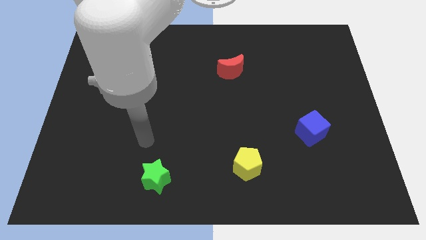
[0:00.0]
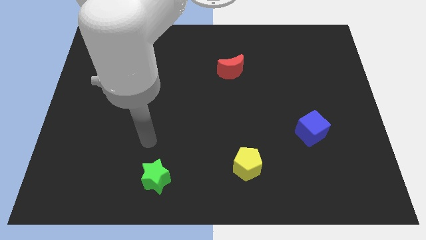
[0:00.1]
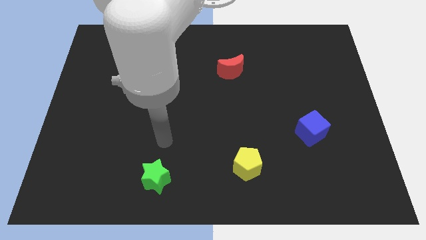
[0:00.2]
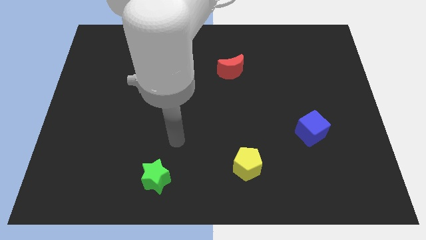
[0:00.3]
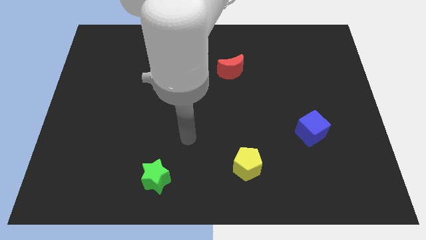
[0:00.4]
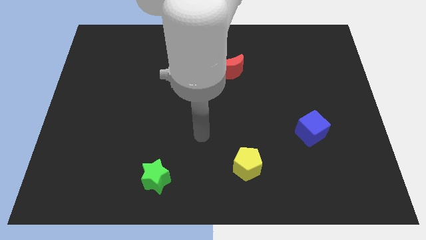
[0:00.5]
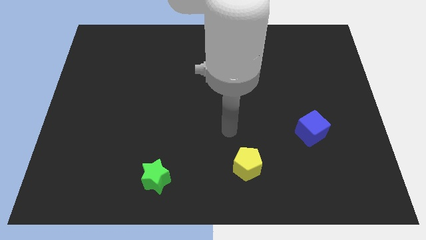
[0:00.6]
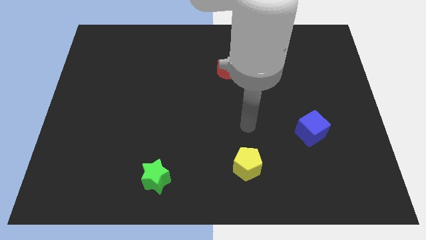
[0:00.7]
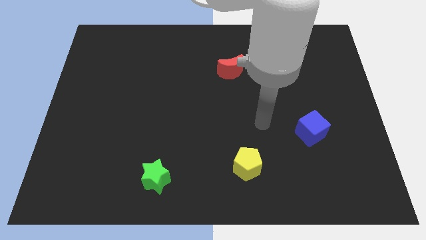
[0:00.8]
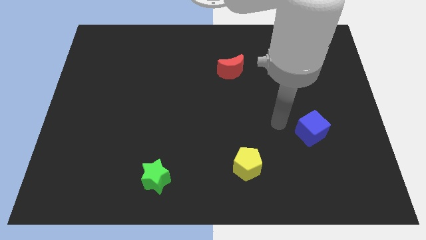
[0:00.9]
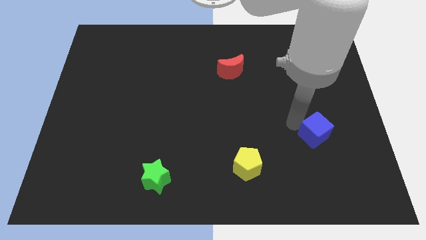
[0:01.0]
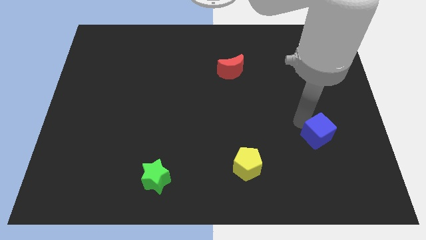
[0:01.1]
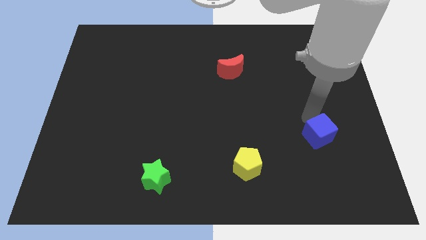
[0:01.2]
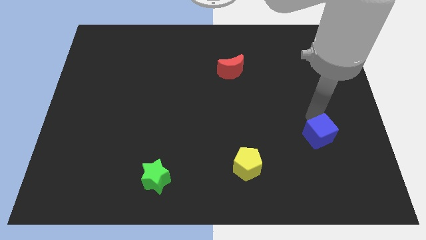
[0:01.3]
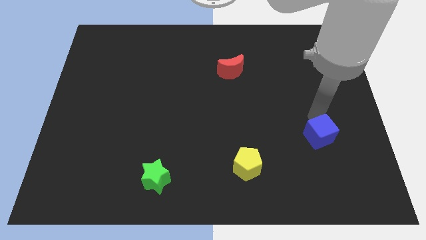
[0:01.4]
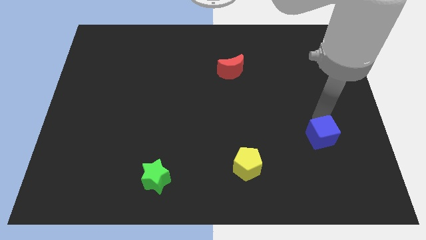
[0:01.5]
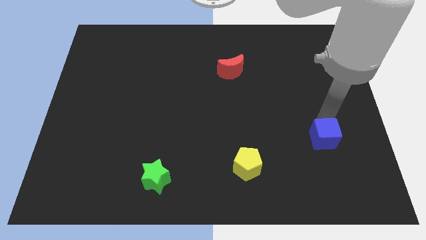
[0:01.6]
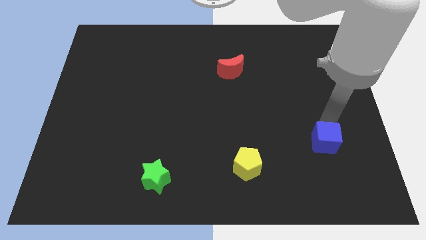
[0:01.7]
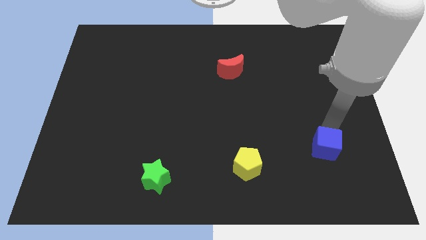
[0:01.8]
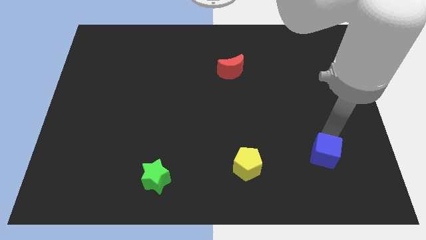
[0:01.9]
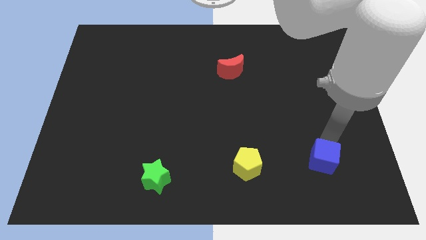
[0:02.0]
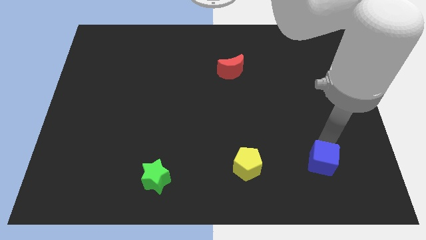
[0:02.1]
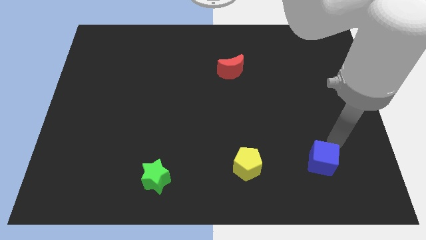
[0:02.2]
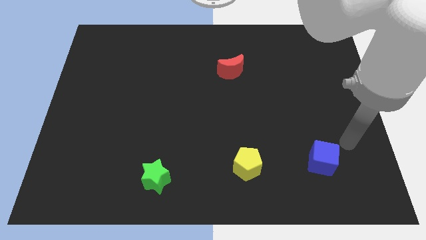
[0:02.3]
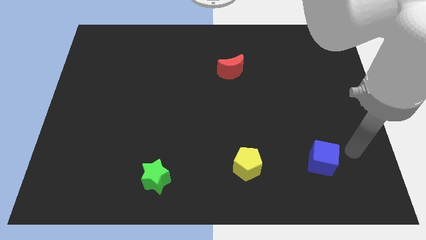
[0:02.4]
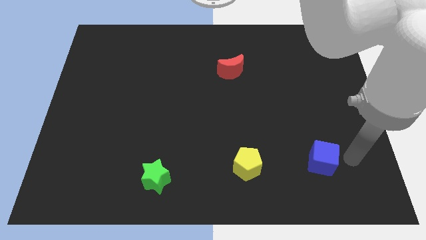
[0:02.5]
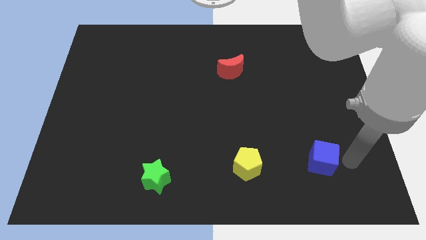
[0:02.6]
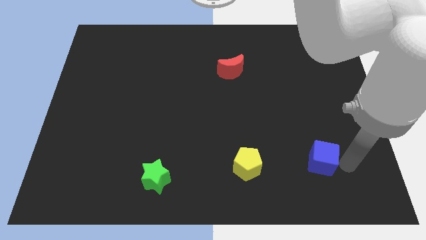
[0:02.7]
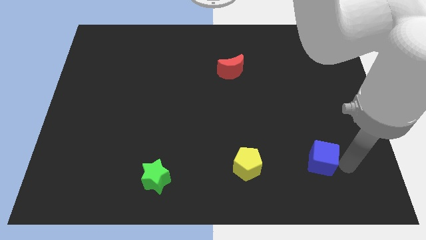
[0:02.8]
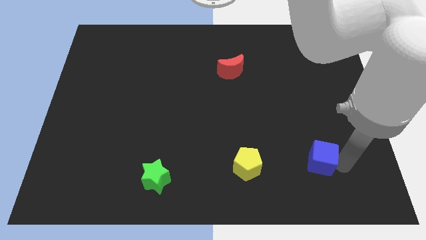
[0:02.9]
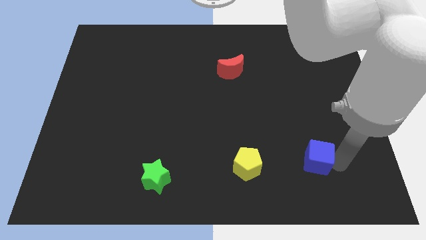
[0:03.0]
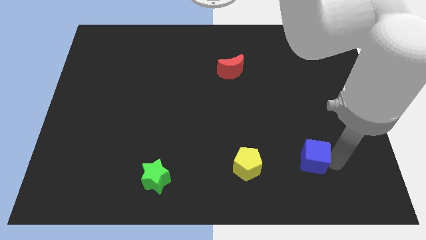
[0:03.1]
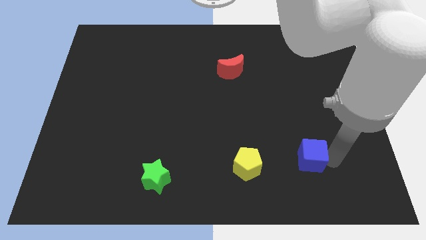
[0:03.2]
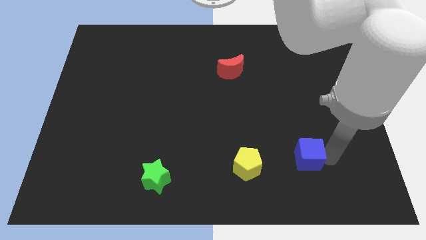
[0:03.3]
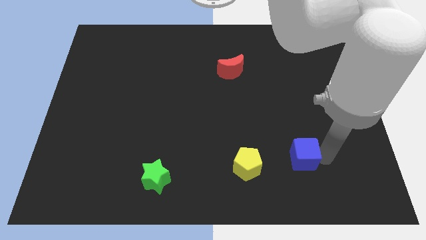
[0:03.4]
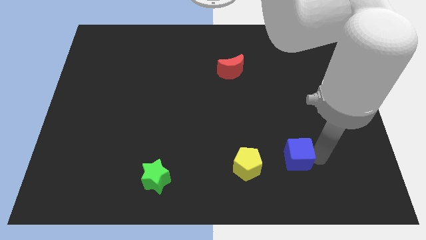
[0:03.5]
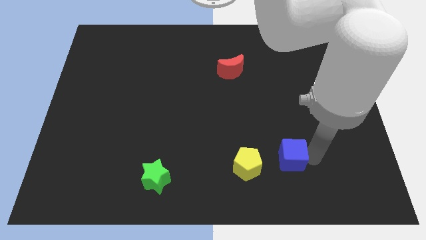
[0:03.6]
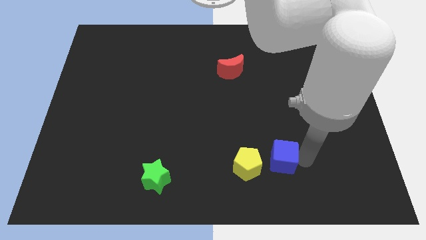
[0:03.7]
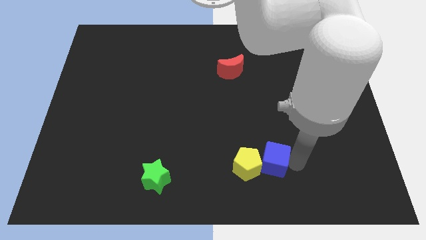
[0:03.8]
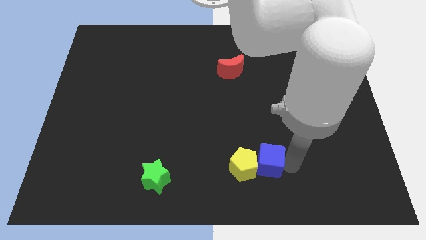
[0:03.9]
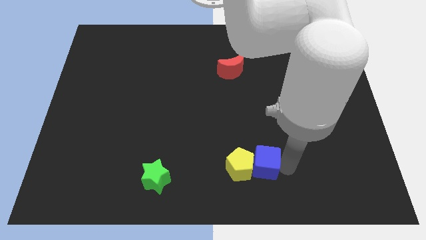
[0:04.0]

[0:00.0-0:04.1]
move the blue block towards the yellow block

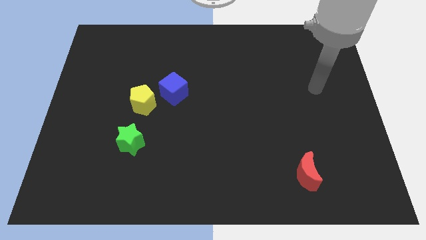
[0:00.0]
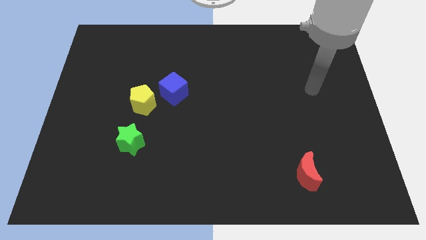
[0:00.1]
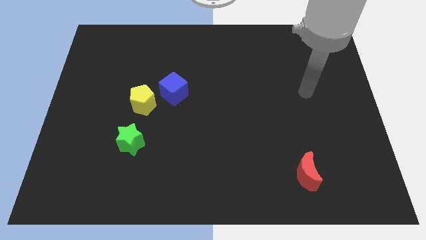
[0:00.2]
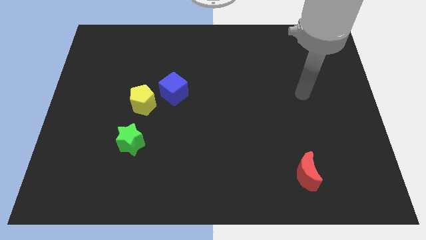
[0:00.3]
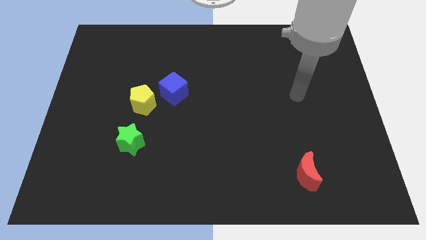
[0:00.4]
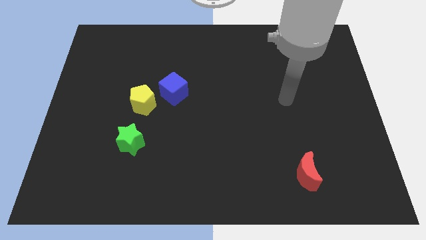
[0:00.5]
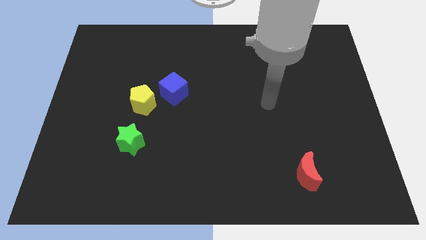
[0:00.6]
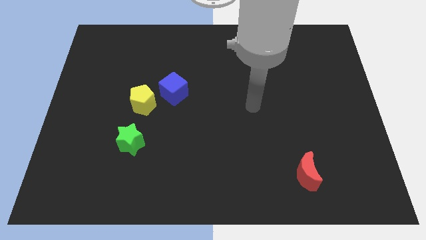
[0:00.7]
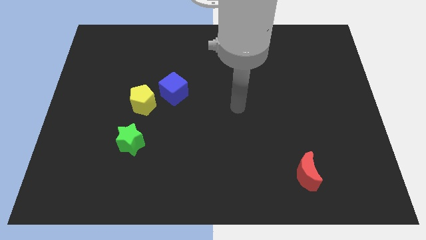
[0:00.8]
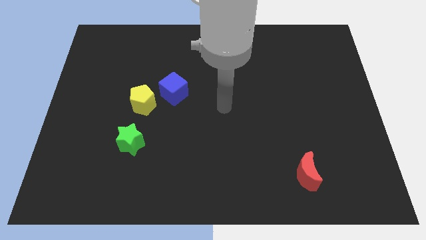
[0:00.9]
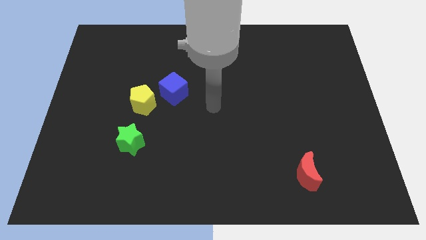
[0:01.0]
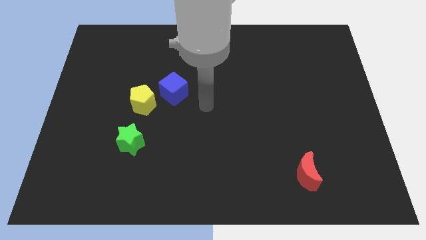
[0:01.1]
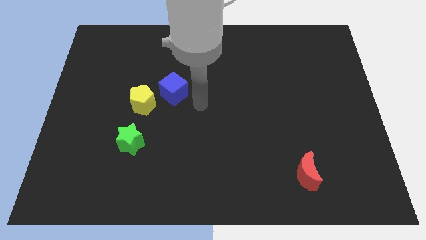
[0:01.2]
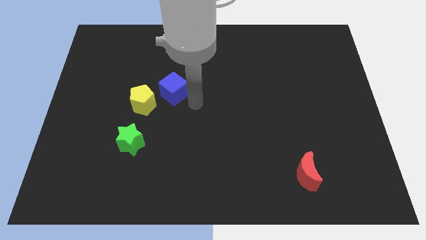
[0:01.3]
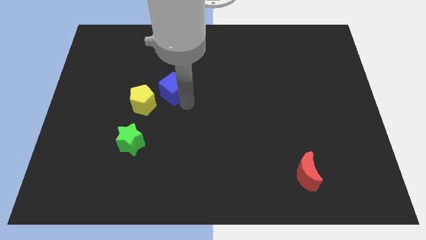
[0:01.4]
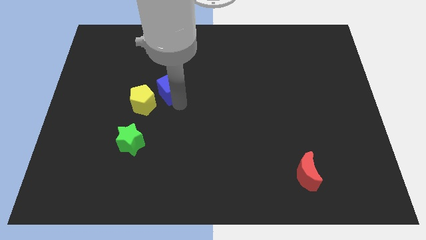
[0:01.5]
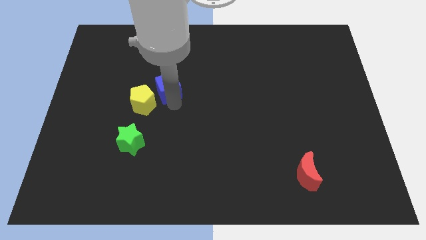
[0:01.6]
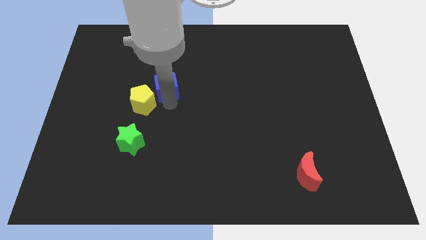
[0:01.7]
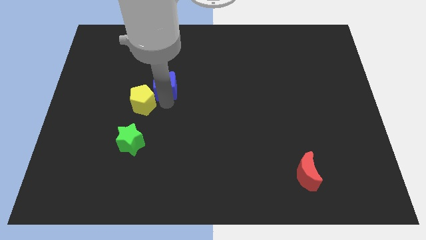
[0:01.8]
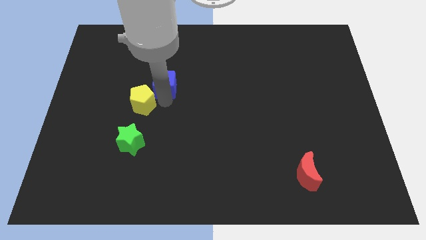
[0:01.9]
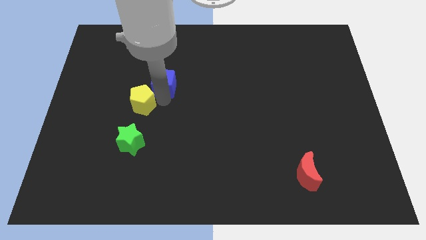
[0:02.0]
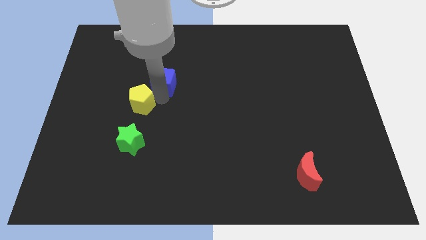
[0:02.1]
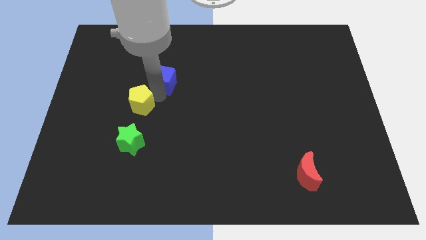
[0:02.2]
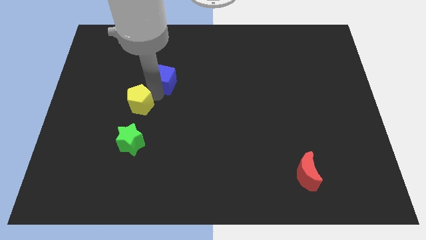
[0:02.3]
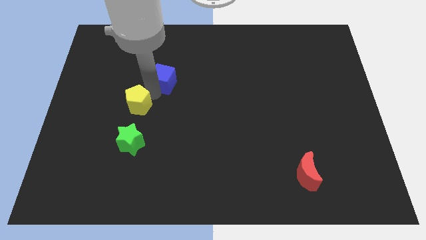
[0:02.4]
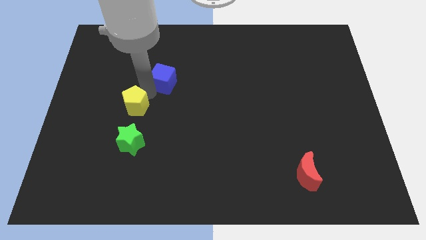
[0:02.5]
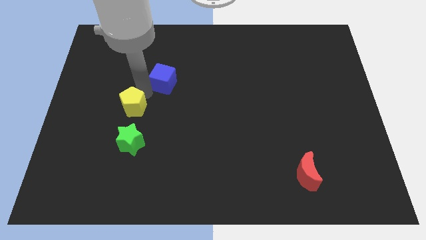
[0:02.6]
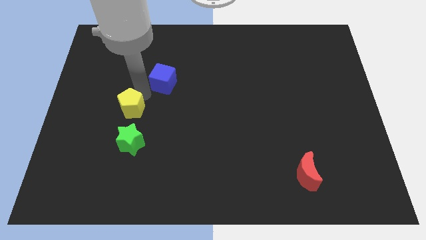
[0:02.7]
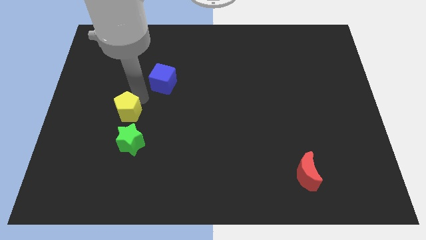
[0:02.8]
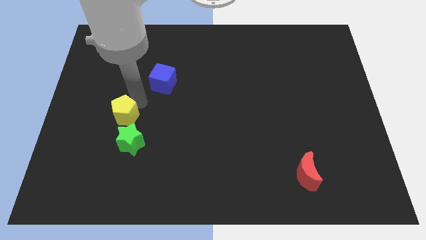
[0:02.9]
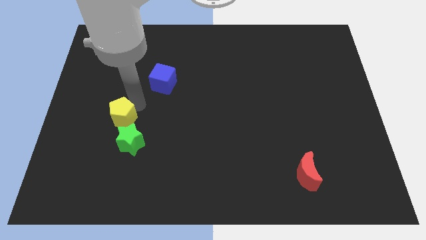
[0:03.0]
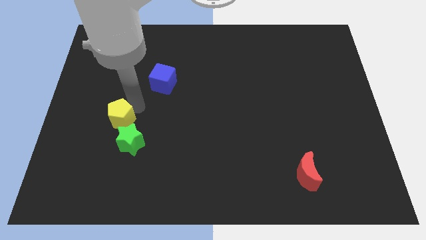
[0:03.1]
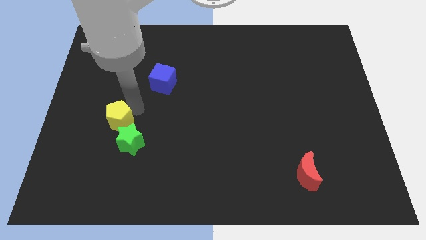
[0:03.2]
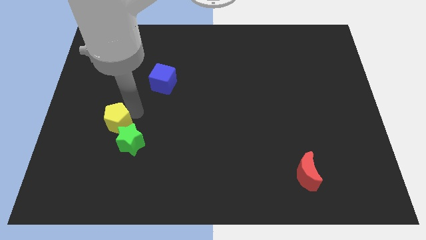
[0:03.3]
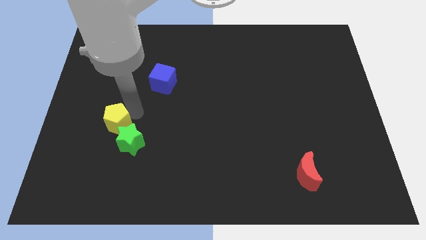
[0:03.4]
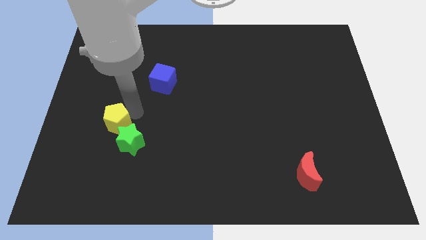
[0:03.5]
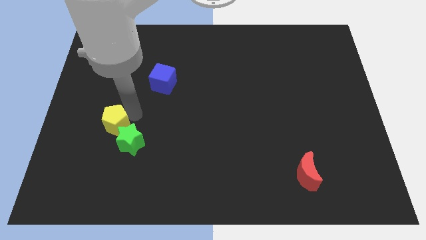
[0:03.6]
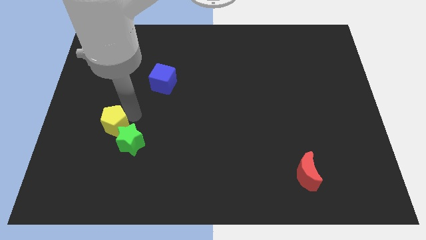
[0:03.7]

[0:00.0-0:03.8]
move the pentagon to the green block

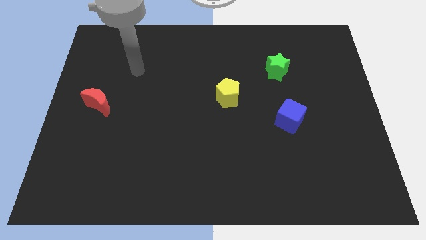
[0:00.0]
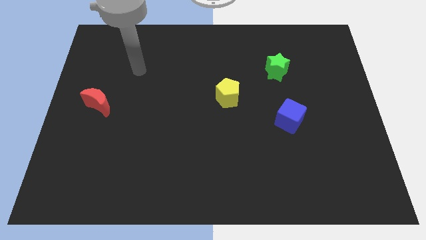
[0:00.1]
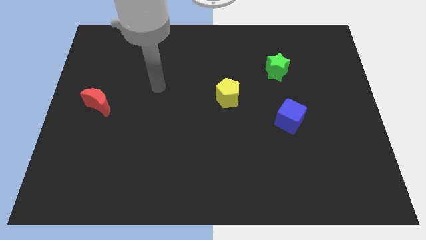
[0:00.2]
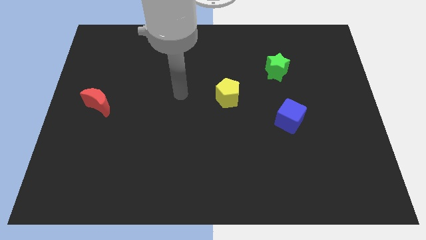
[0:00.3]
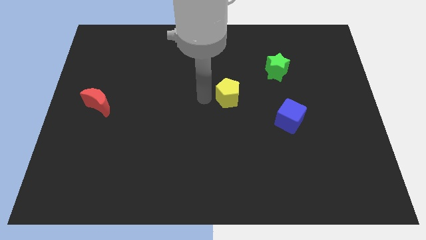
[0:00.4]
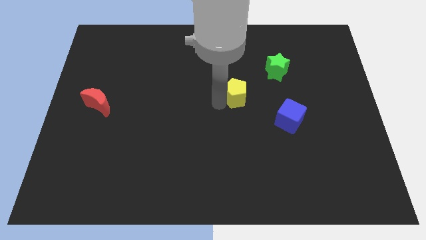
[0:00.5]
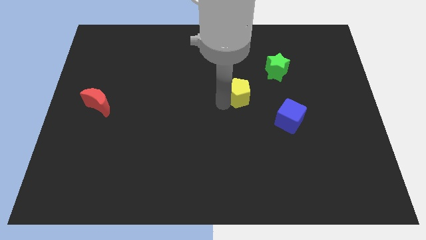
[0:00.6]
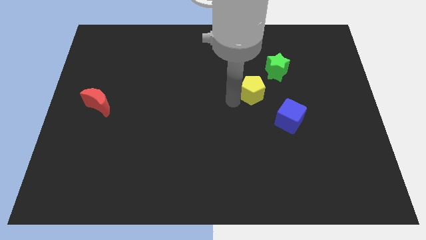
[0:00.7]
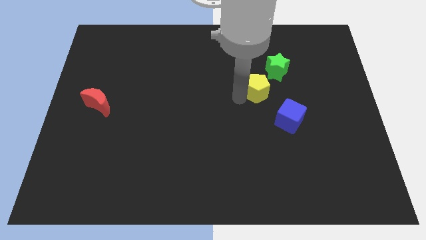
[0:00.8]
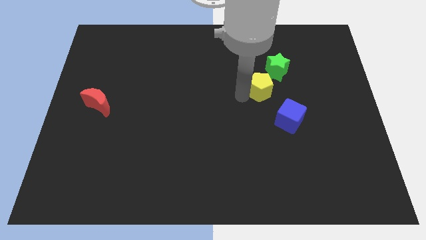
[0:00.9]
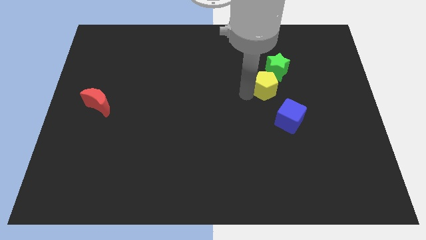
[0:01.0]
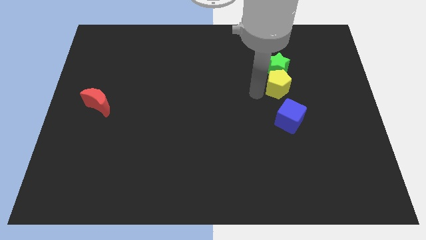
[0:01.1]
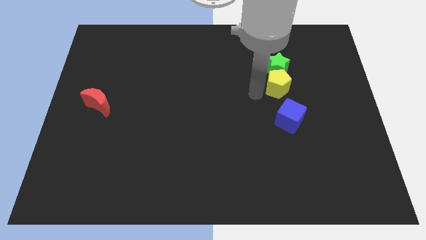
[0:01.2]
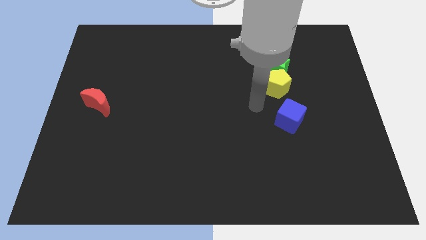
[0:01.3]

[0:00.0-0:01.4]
move the yellow block to the green star
